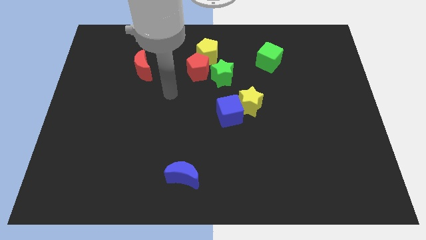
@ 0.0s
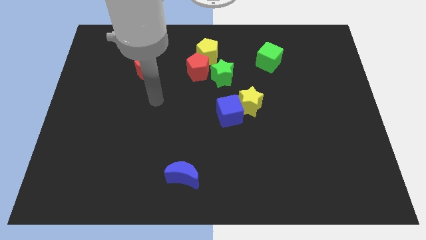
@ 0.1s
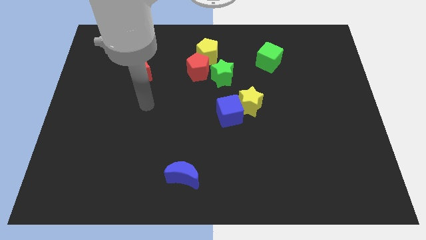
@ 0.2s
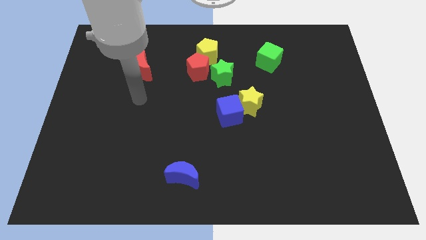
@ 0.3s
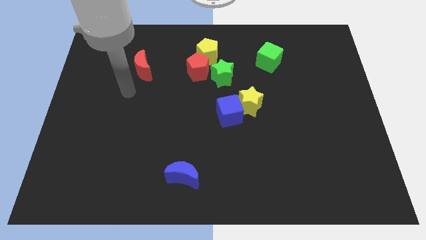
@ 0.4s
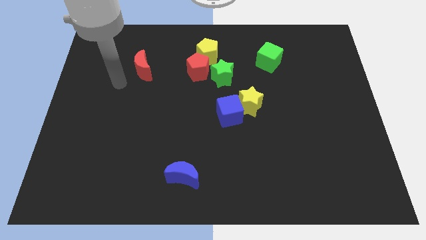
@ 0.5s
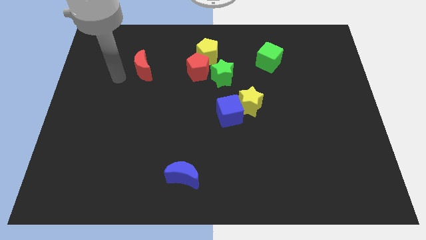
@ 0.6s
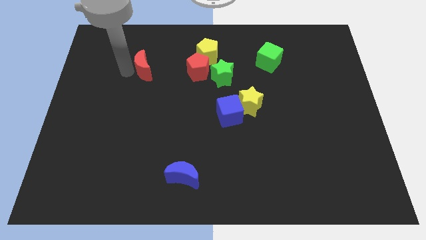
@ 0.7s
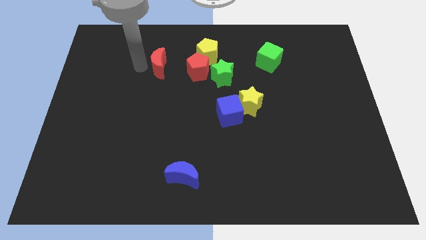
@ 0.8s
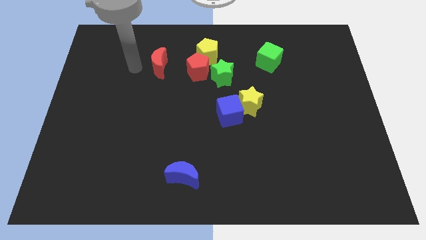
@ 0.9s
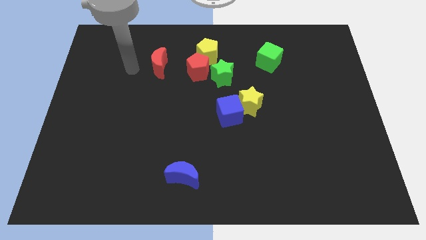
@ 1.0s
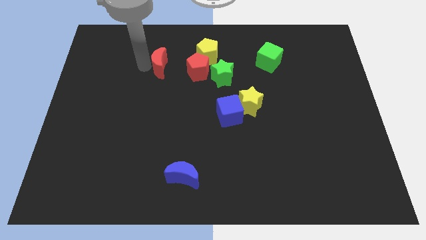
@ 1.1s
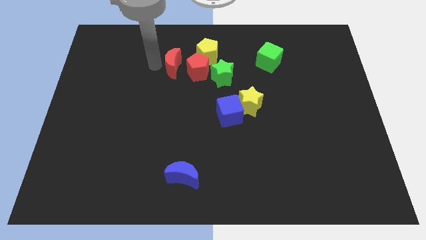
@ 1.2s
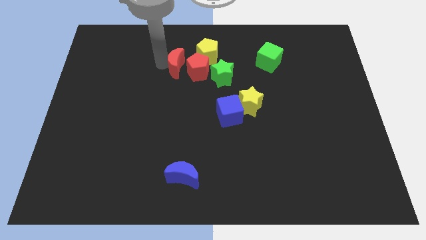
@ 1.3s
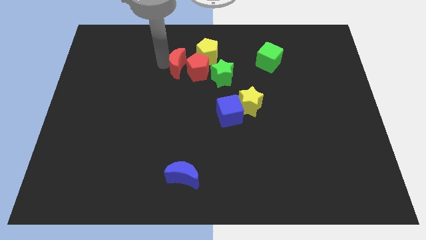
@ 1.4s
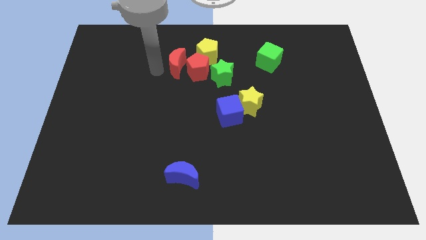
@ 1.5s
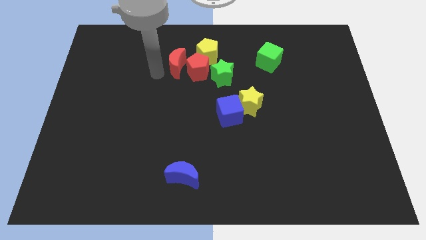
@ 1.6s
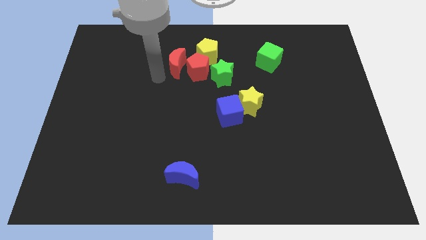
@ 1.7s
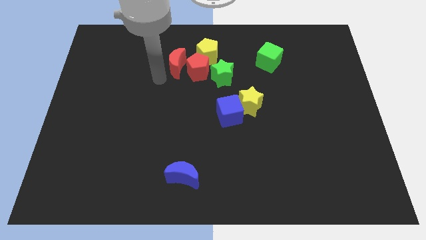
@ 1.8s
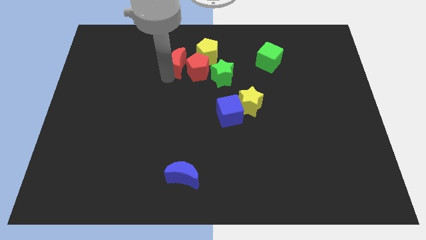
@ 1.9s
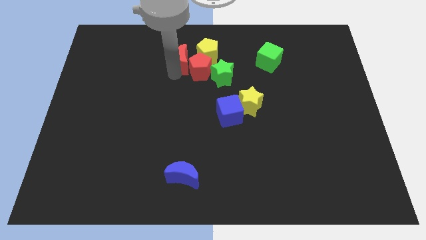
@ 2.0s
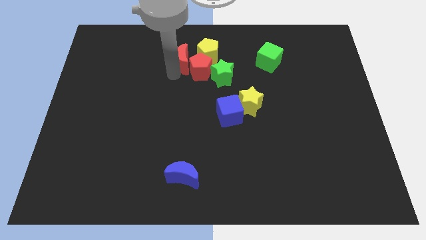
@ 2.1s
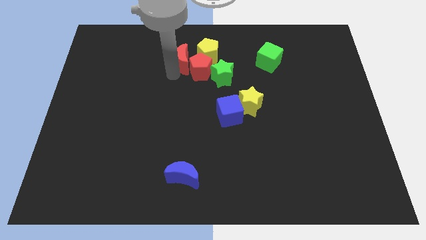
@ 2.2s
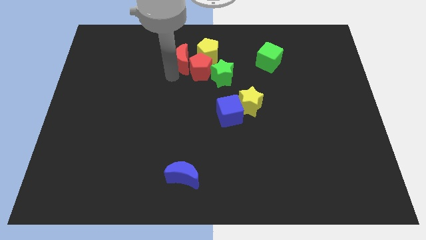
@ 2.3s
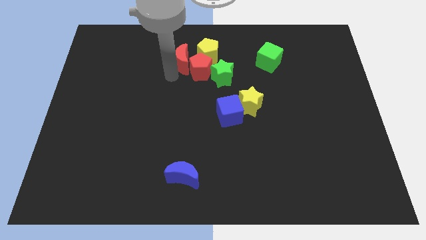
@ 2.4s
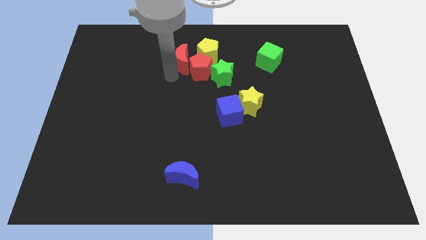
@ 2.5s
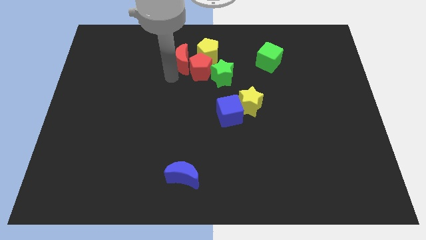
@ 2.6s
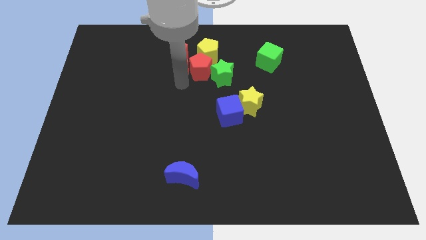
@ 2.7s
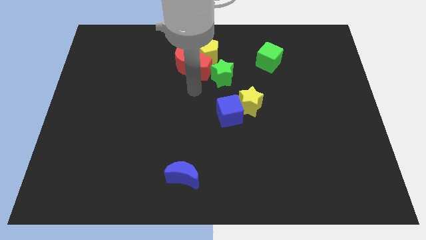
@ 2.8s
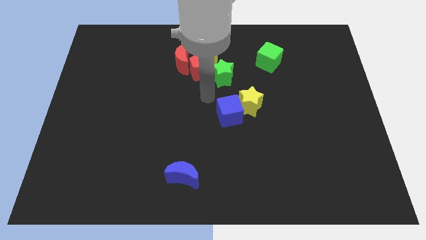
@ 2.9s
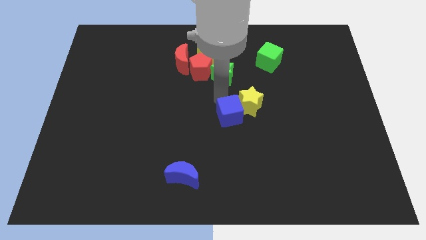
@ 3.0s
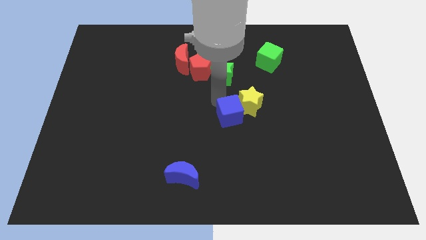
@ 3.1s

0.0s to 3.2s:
slide red moon into red pentagon

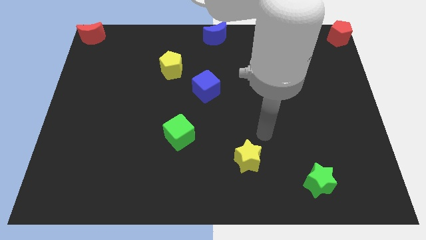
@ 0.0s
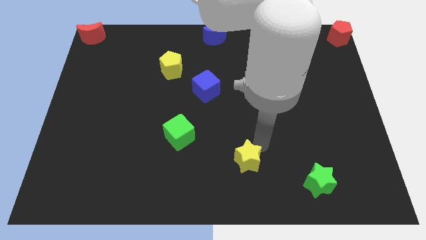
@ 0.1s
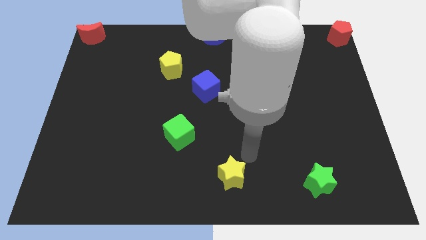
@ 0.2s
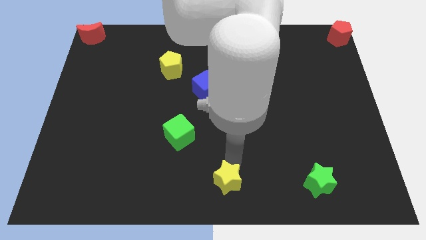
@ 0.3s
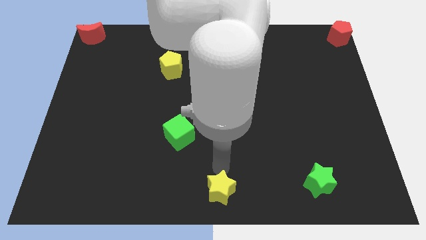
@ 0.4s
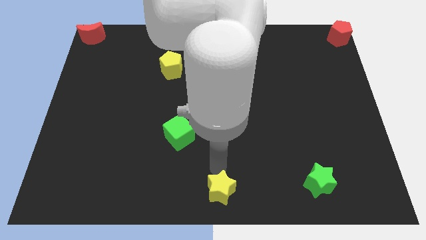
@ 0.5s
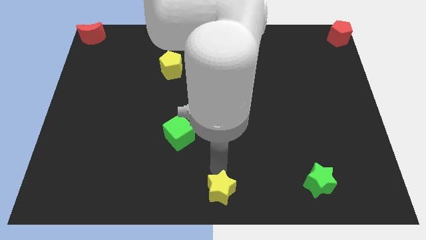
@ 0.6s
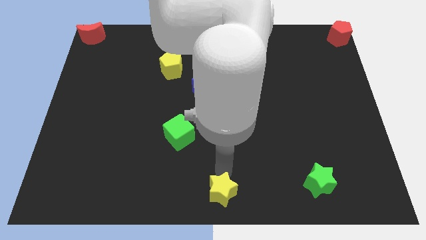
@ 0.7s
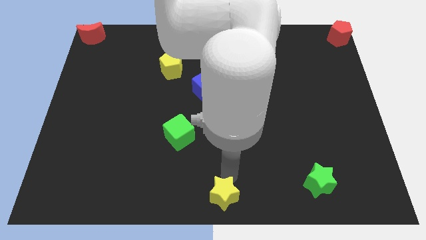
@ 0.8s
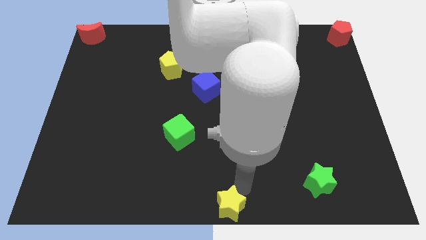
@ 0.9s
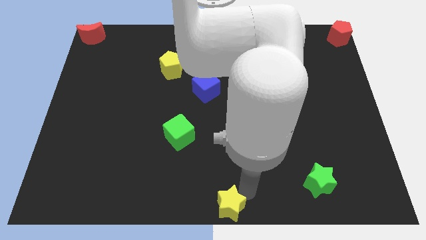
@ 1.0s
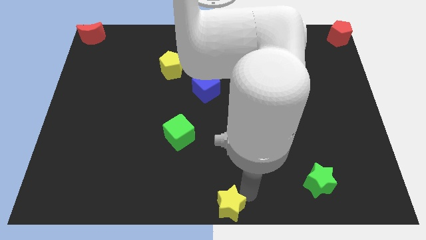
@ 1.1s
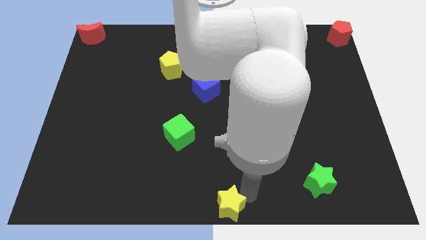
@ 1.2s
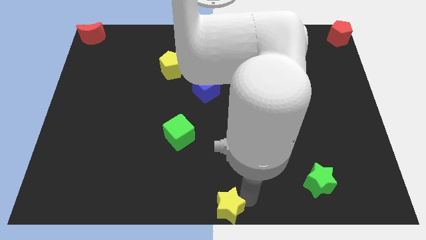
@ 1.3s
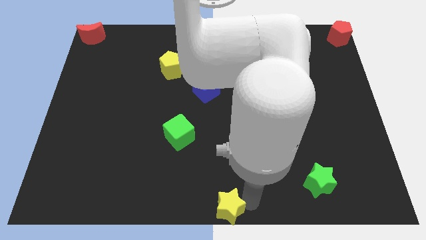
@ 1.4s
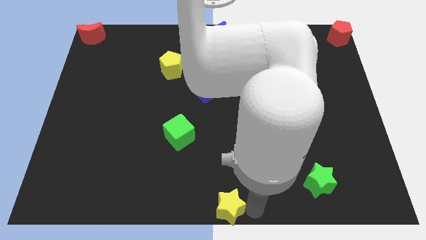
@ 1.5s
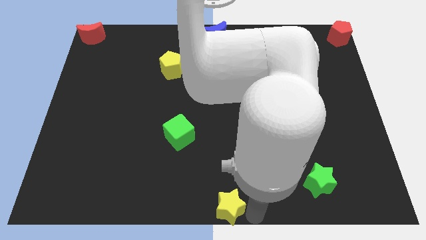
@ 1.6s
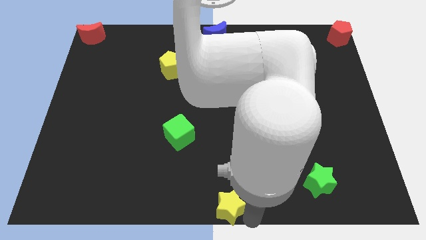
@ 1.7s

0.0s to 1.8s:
move the yellow star to the bottom center of the board

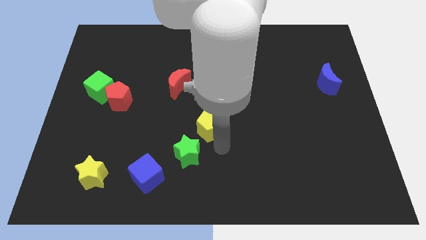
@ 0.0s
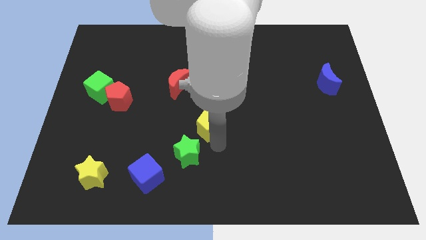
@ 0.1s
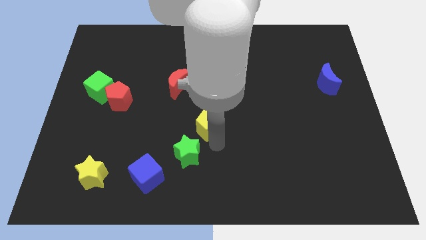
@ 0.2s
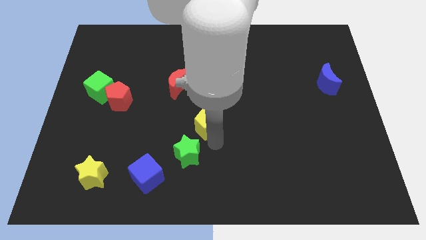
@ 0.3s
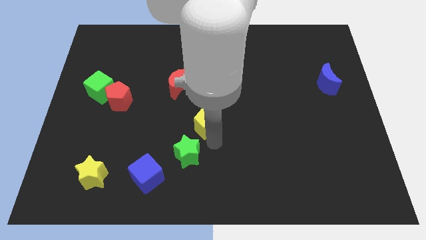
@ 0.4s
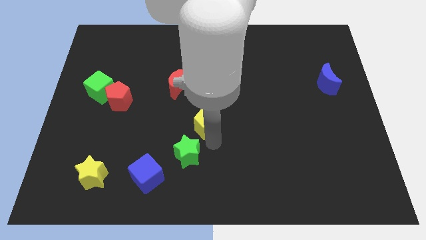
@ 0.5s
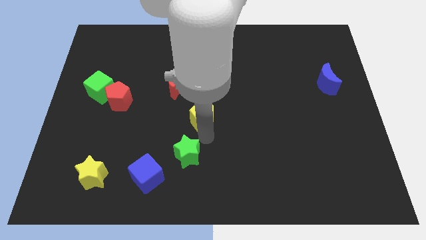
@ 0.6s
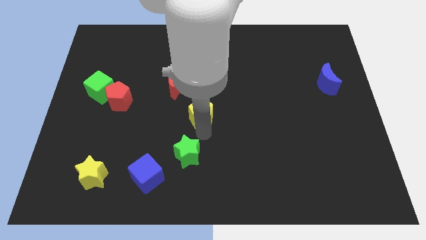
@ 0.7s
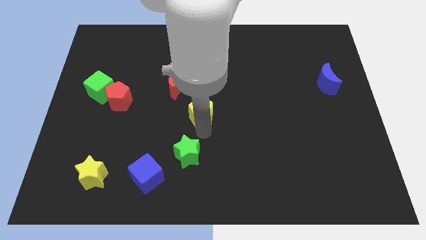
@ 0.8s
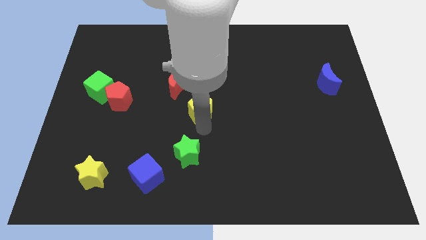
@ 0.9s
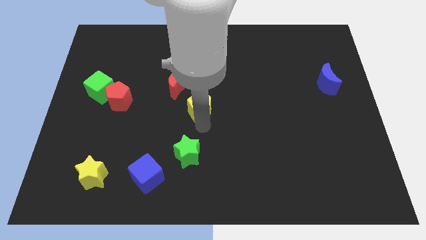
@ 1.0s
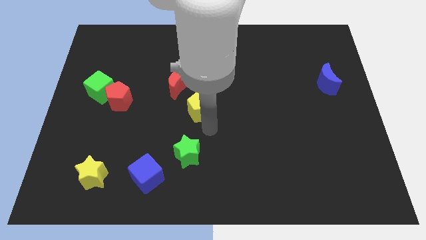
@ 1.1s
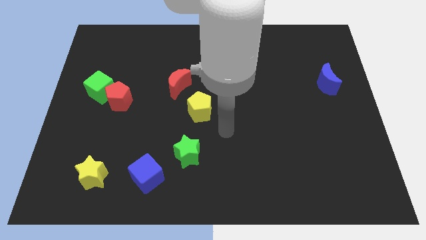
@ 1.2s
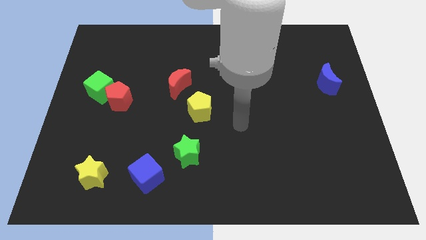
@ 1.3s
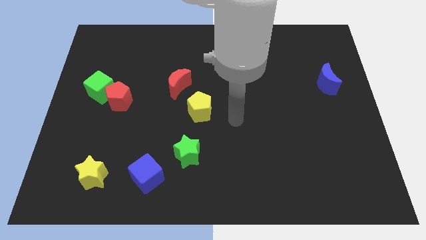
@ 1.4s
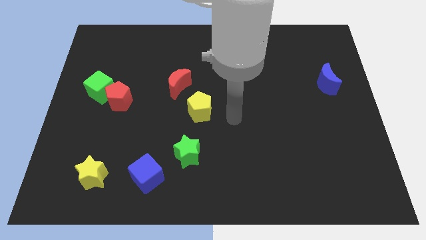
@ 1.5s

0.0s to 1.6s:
slightly push the yellow pentagon towards the red moon

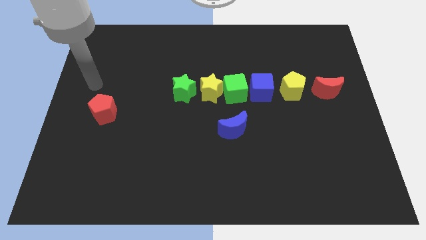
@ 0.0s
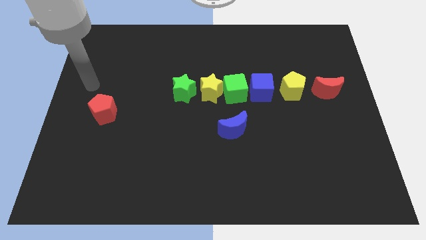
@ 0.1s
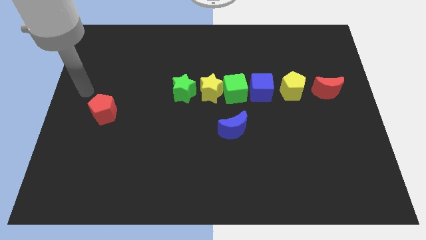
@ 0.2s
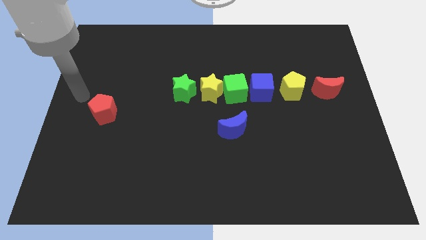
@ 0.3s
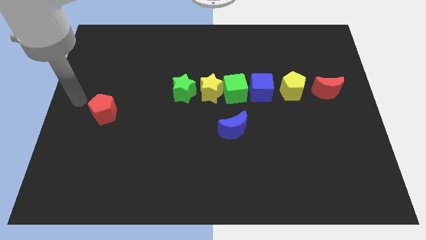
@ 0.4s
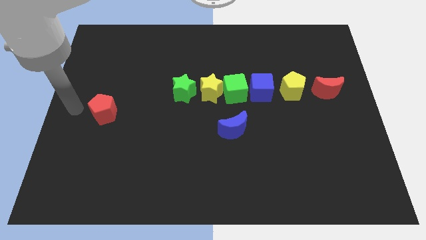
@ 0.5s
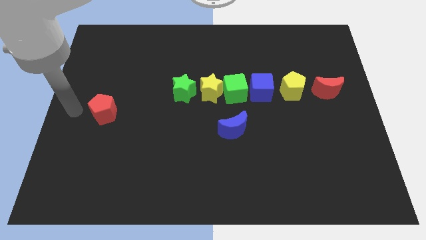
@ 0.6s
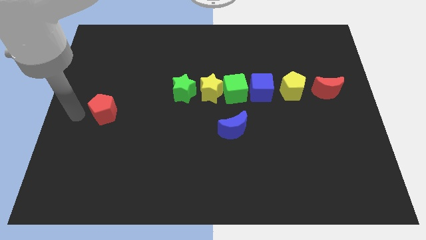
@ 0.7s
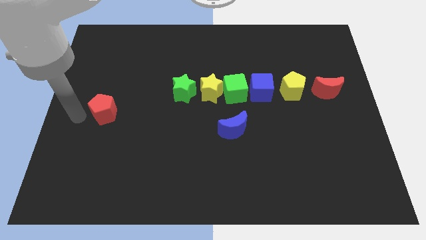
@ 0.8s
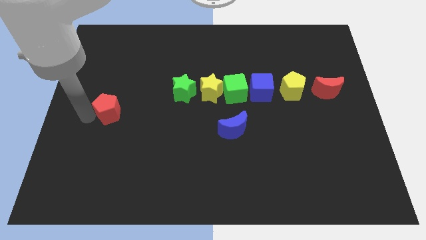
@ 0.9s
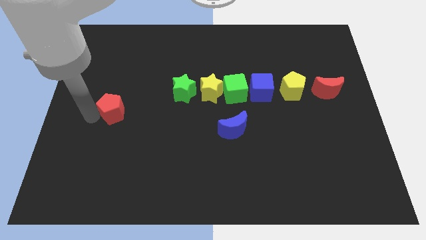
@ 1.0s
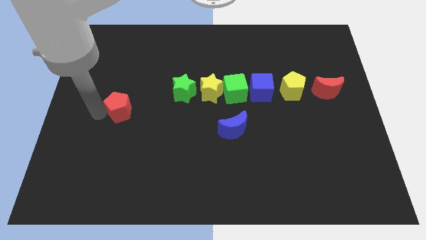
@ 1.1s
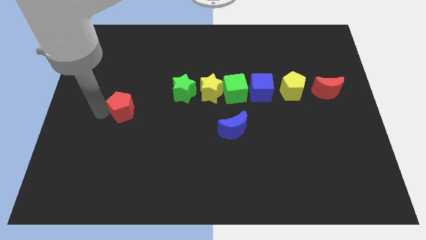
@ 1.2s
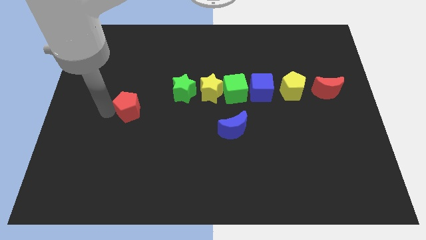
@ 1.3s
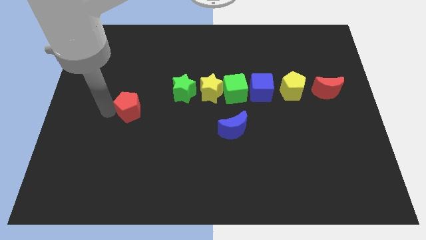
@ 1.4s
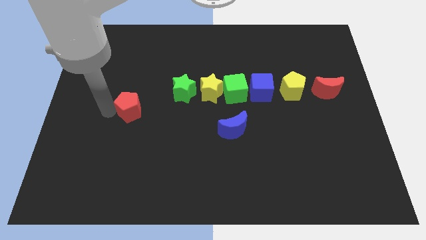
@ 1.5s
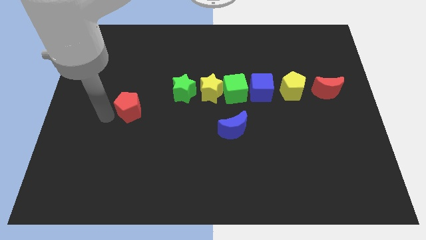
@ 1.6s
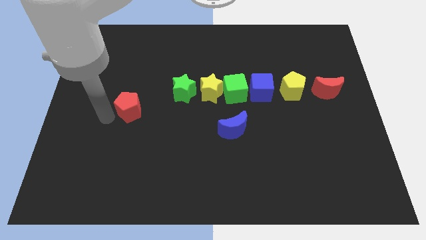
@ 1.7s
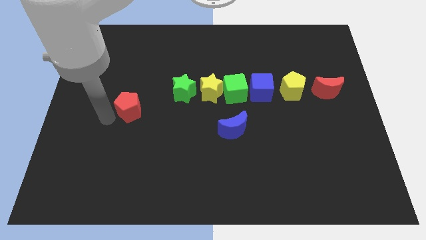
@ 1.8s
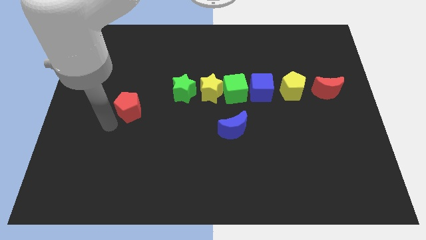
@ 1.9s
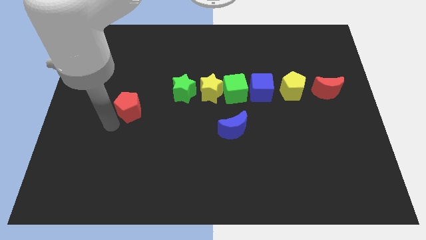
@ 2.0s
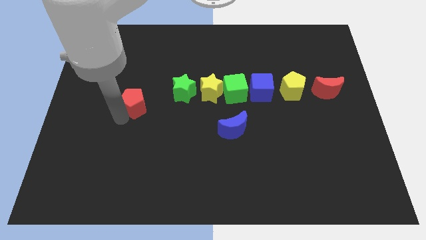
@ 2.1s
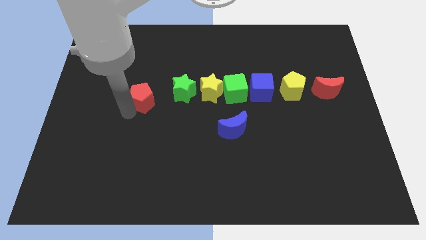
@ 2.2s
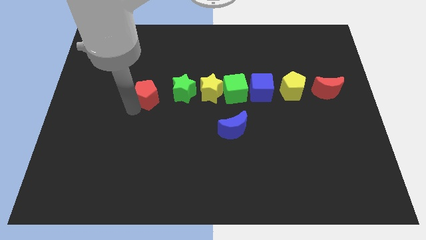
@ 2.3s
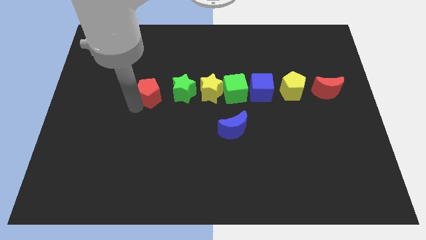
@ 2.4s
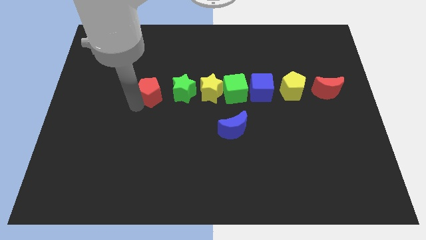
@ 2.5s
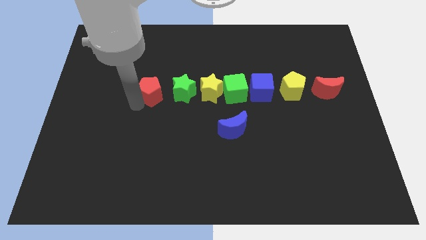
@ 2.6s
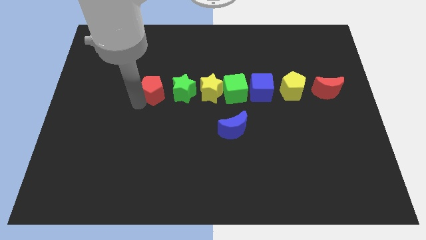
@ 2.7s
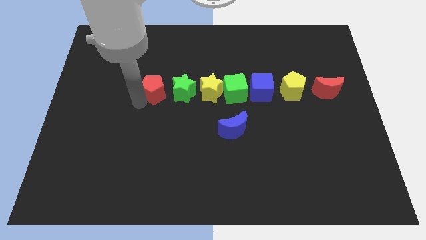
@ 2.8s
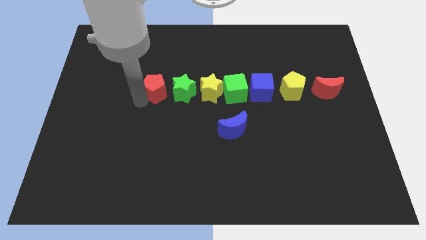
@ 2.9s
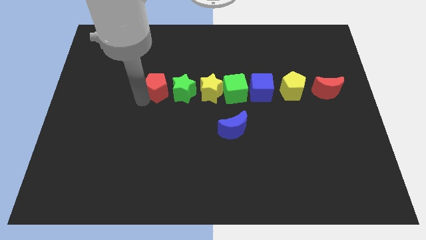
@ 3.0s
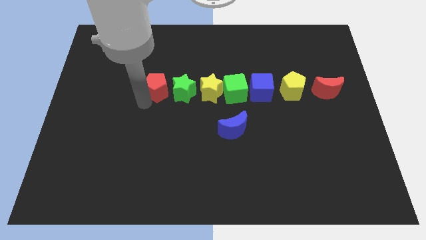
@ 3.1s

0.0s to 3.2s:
move the red pentagon to the left of the green star
